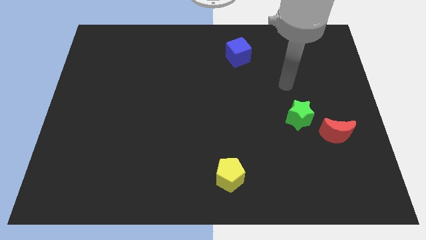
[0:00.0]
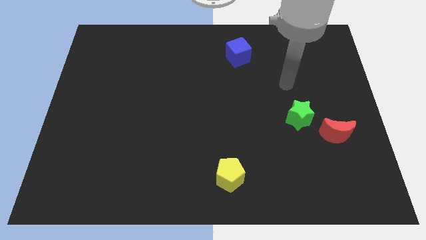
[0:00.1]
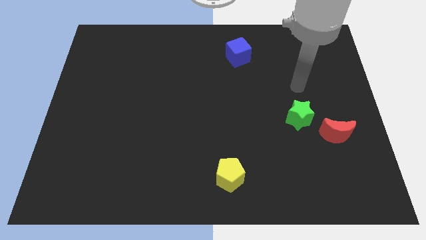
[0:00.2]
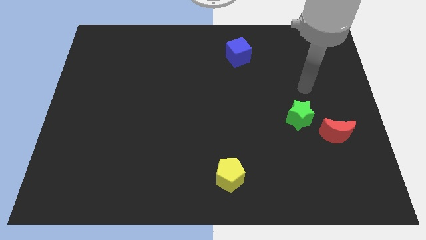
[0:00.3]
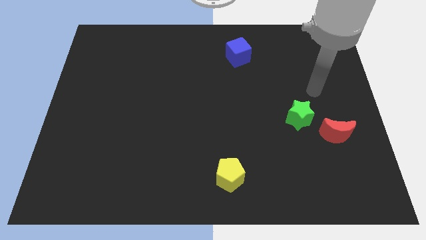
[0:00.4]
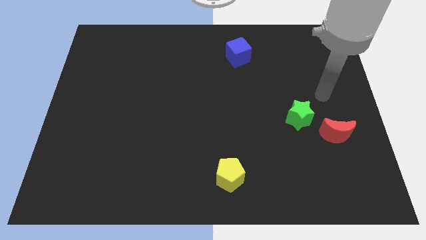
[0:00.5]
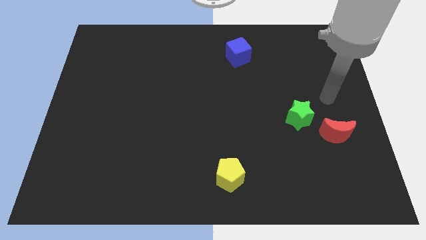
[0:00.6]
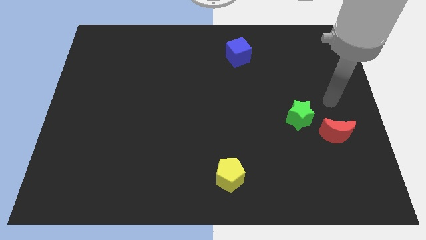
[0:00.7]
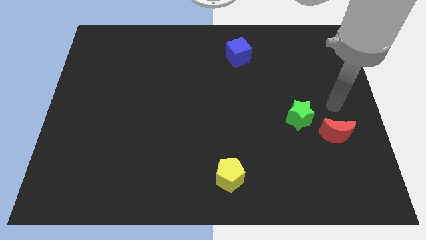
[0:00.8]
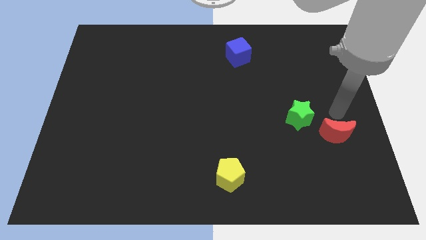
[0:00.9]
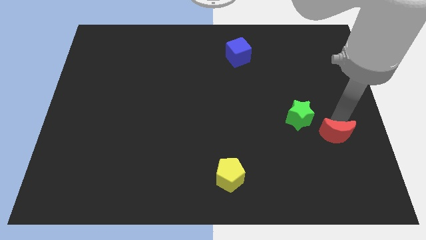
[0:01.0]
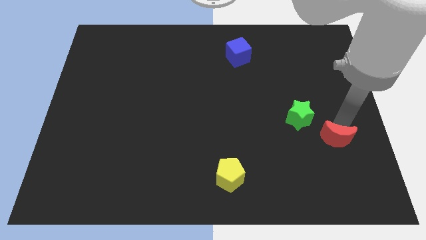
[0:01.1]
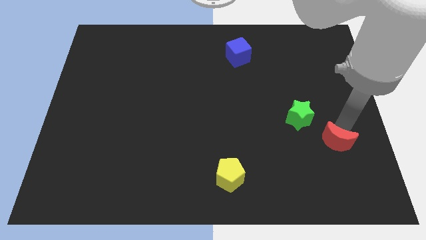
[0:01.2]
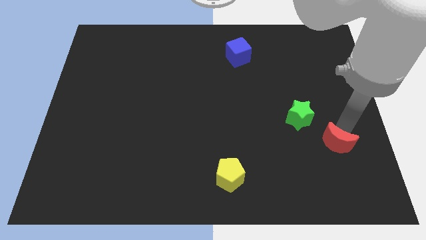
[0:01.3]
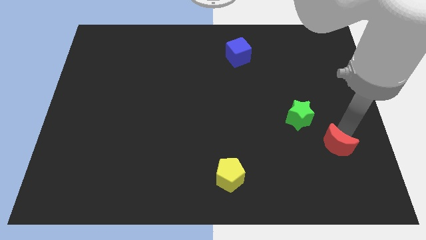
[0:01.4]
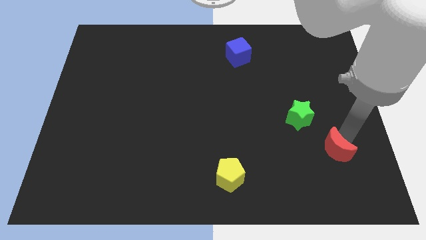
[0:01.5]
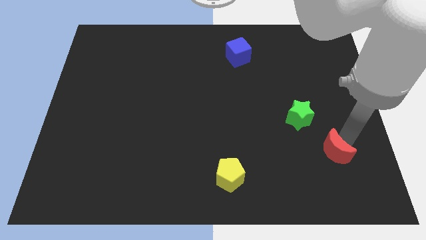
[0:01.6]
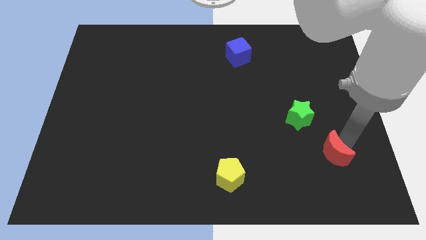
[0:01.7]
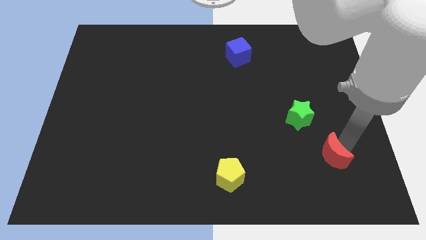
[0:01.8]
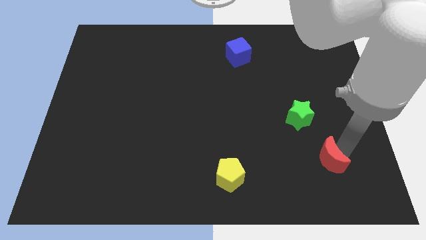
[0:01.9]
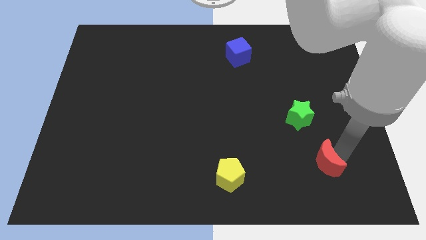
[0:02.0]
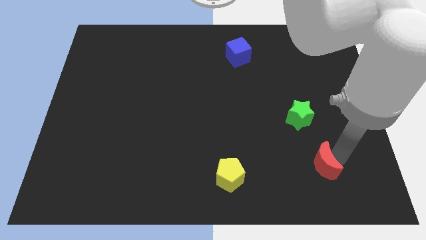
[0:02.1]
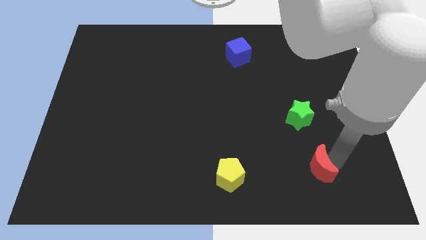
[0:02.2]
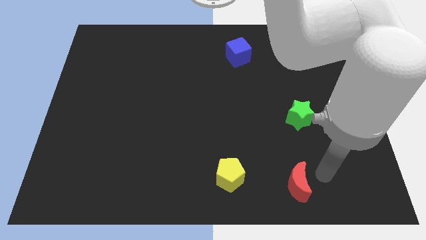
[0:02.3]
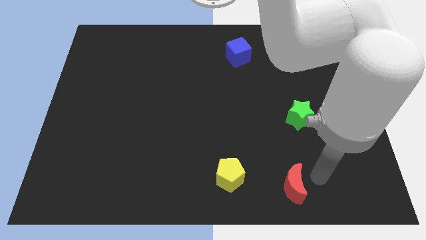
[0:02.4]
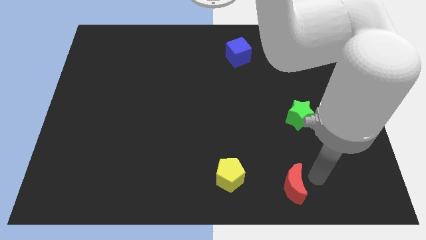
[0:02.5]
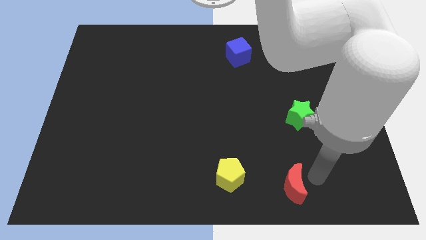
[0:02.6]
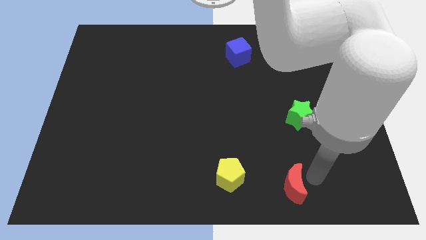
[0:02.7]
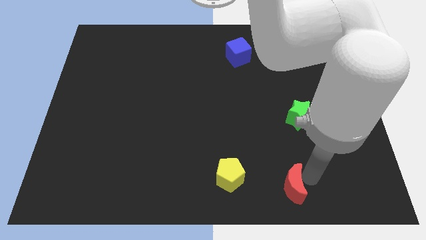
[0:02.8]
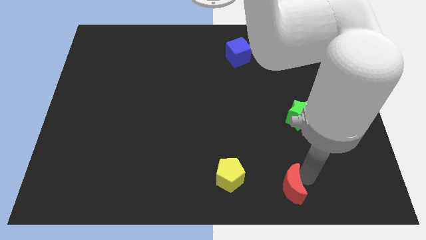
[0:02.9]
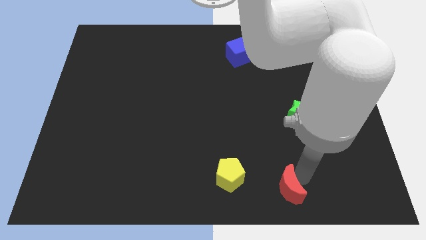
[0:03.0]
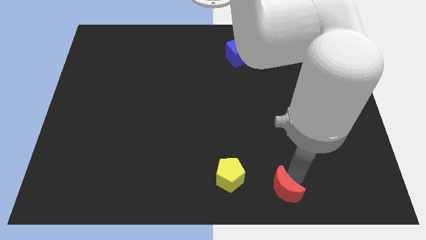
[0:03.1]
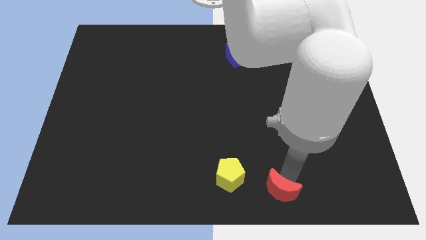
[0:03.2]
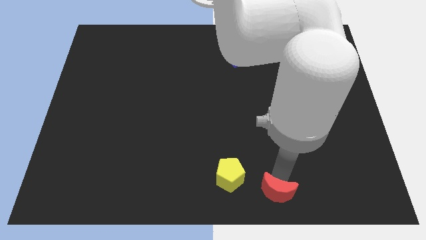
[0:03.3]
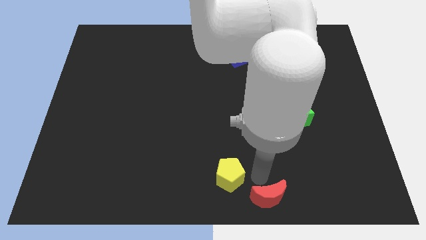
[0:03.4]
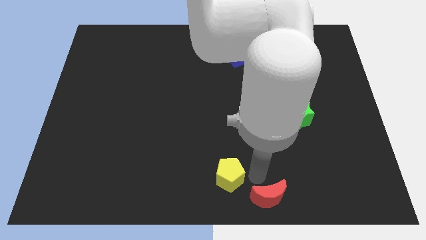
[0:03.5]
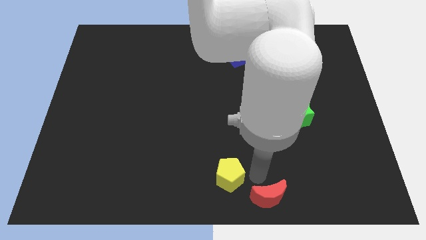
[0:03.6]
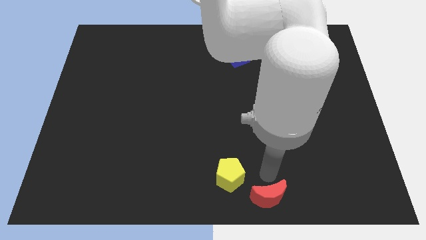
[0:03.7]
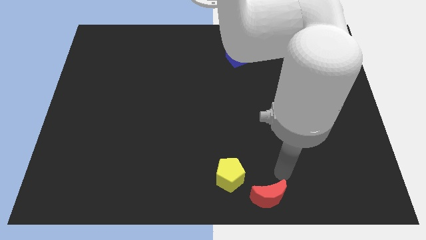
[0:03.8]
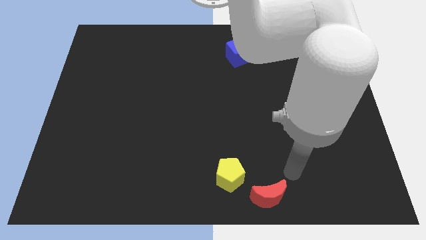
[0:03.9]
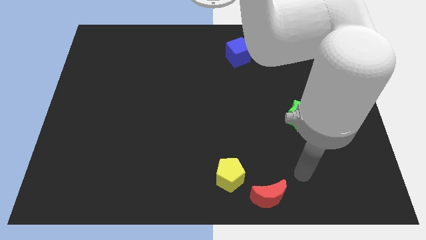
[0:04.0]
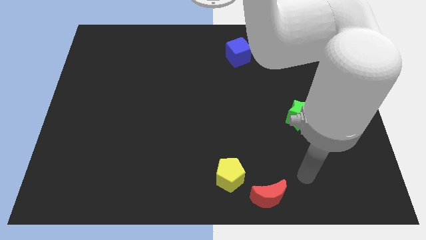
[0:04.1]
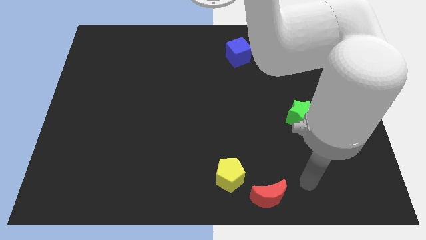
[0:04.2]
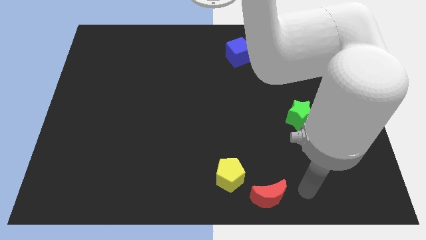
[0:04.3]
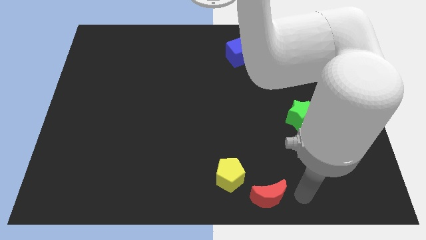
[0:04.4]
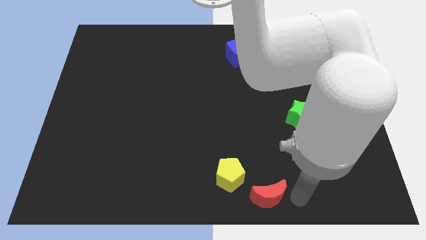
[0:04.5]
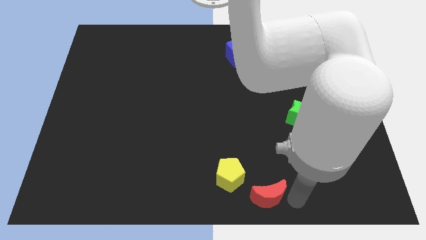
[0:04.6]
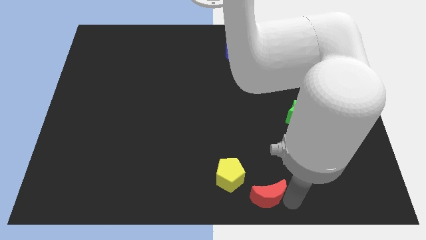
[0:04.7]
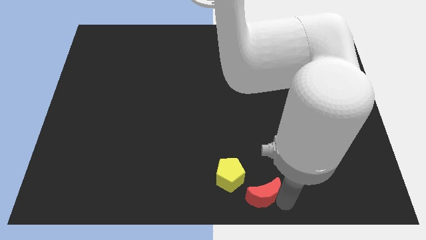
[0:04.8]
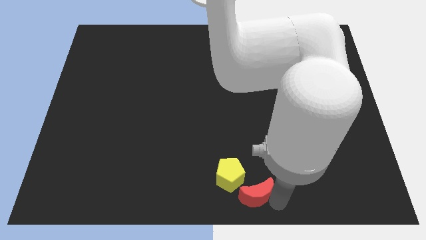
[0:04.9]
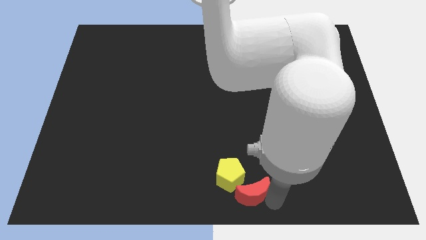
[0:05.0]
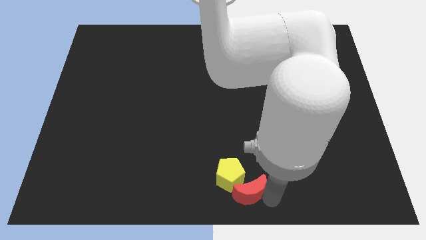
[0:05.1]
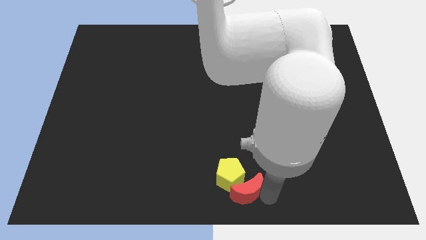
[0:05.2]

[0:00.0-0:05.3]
move the red block close to the yellow pentagon

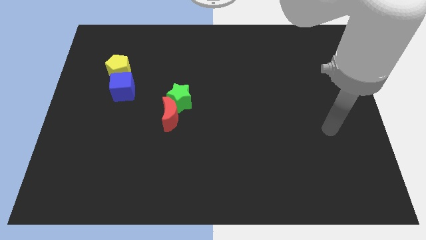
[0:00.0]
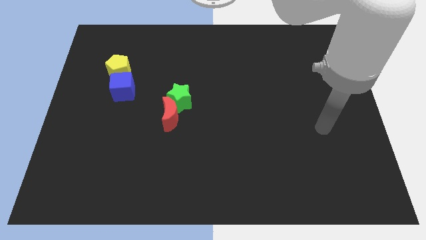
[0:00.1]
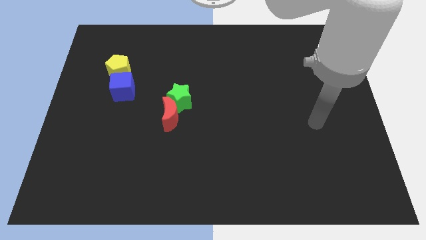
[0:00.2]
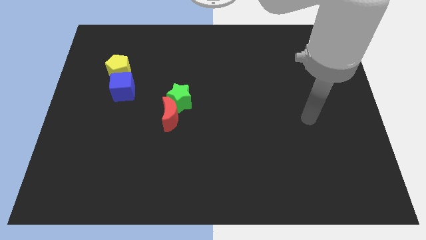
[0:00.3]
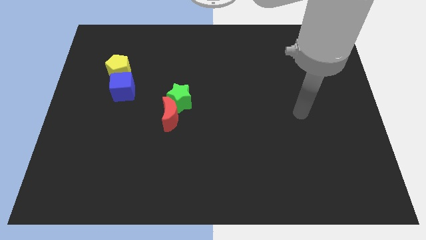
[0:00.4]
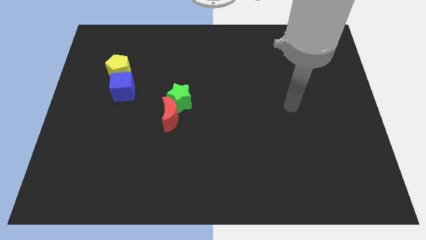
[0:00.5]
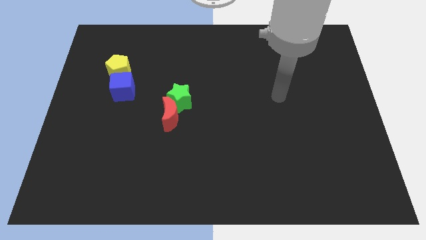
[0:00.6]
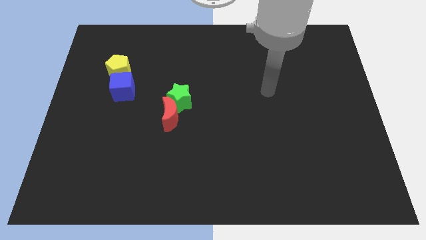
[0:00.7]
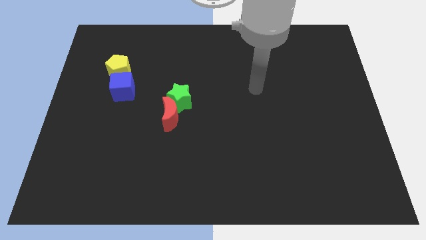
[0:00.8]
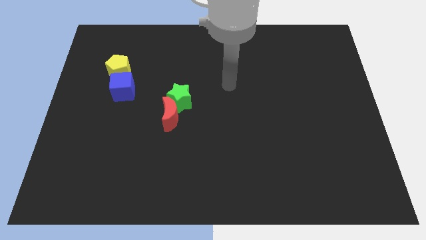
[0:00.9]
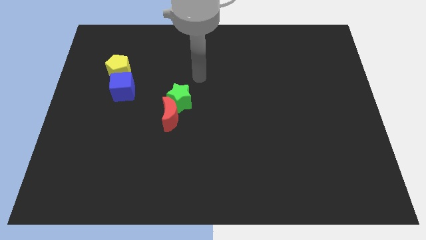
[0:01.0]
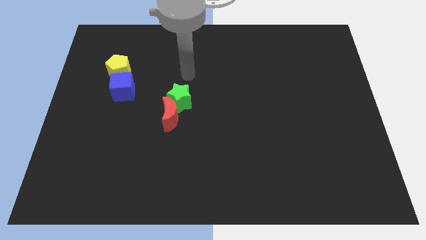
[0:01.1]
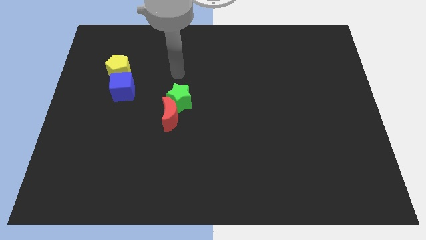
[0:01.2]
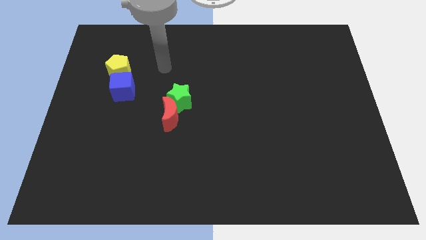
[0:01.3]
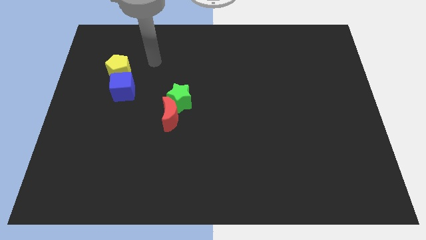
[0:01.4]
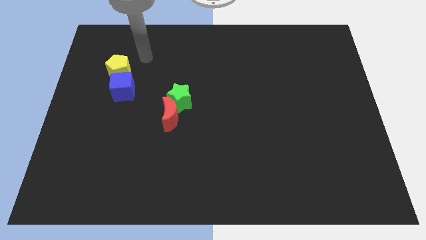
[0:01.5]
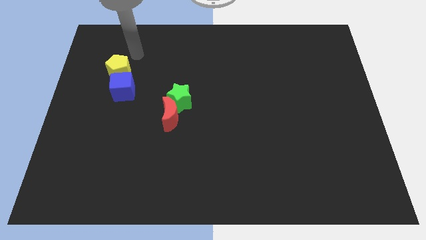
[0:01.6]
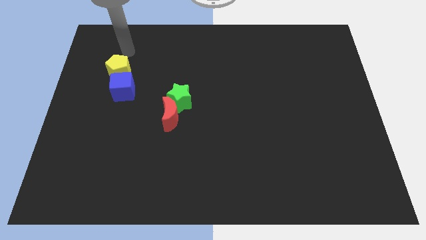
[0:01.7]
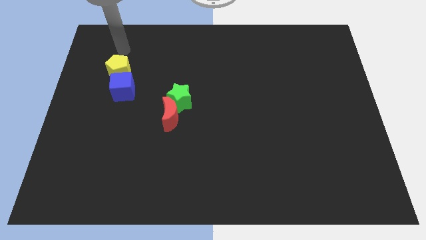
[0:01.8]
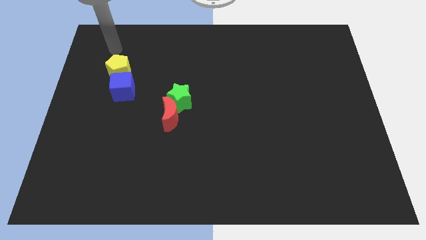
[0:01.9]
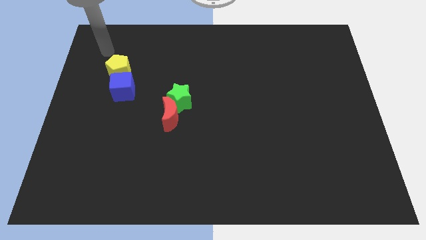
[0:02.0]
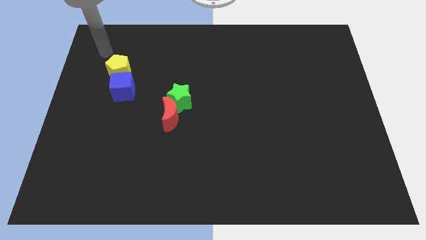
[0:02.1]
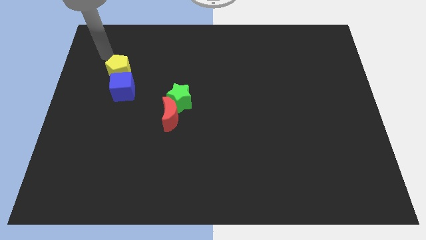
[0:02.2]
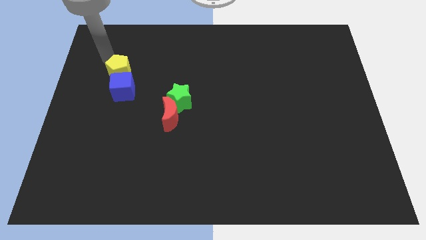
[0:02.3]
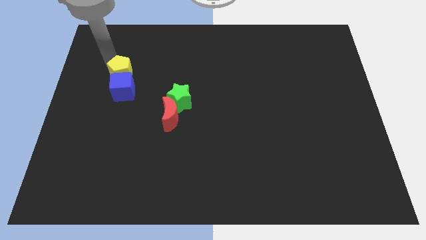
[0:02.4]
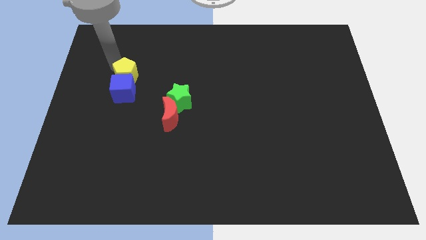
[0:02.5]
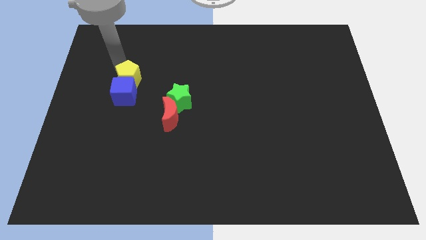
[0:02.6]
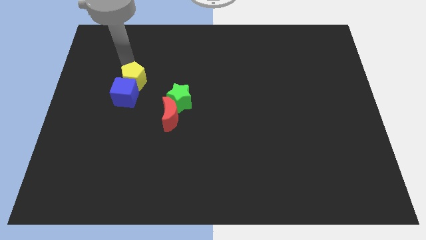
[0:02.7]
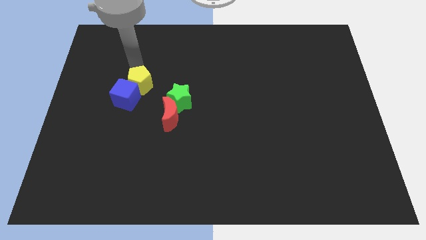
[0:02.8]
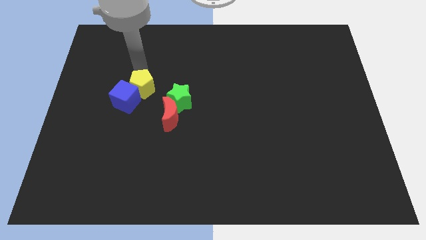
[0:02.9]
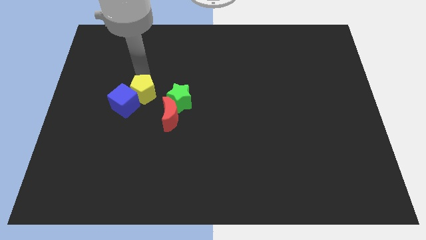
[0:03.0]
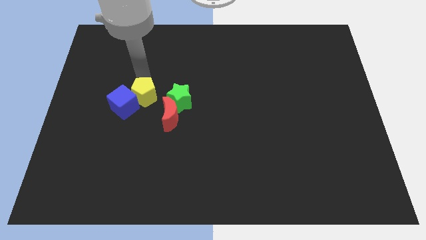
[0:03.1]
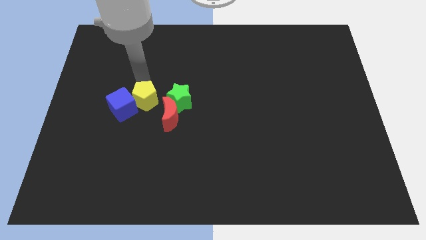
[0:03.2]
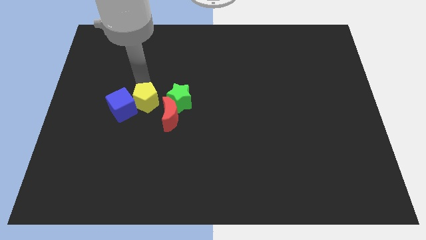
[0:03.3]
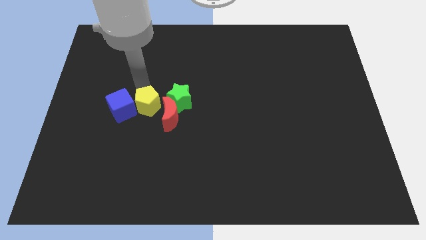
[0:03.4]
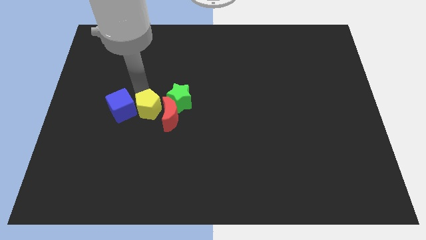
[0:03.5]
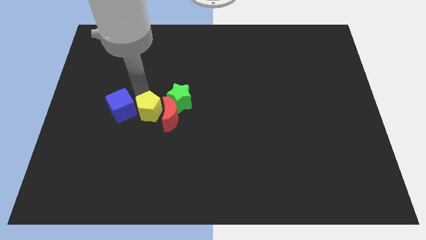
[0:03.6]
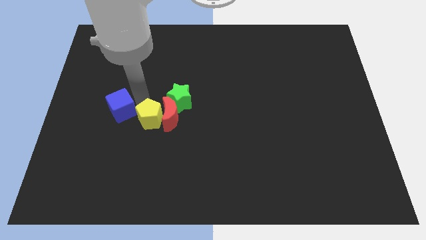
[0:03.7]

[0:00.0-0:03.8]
move the yellow pentagon next to the red moon
